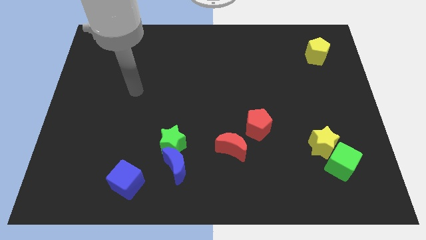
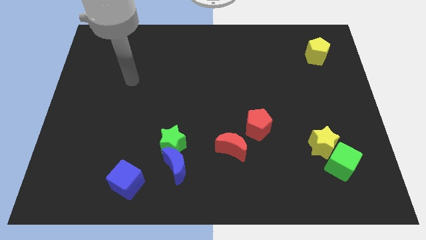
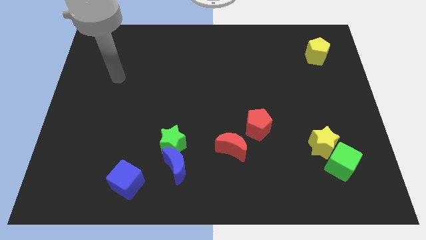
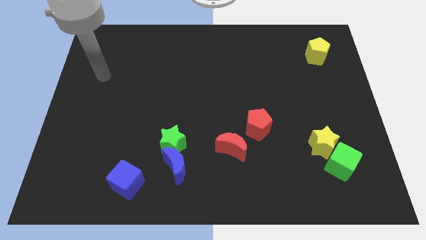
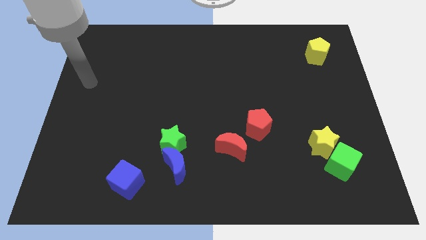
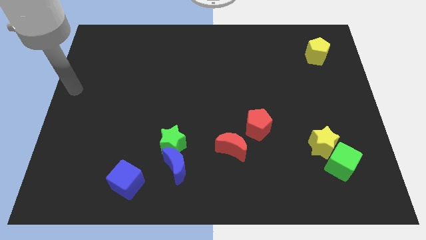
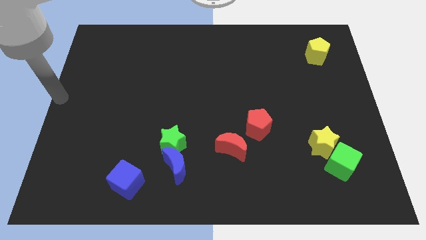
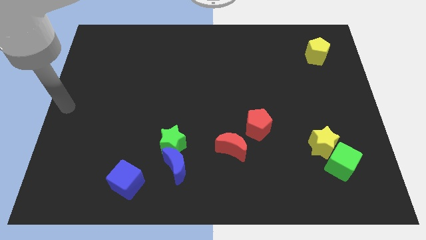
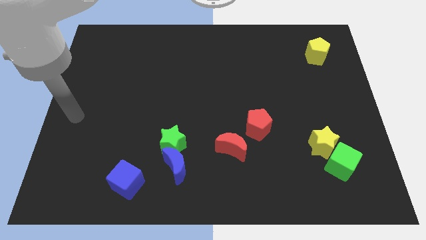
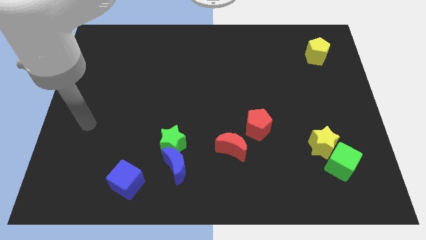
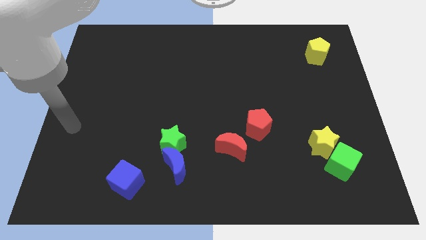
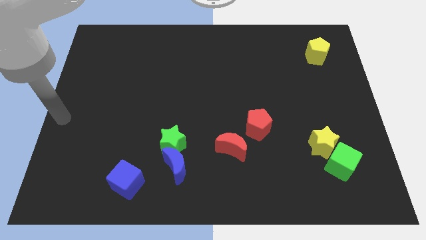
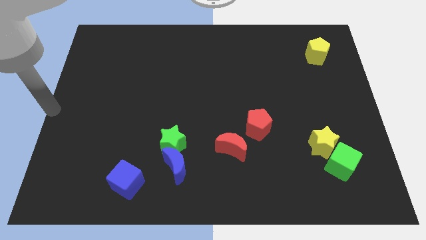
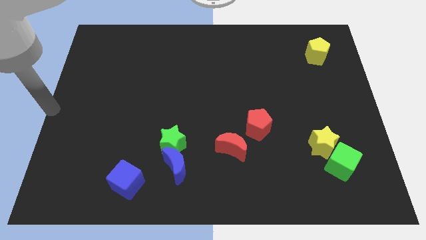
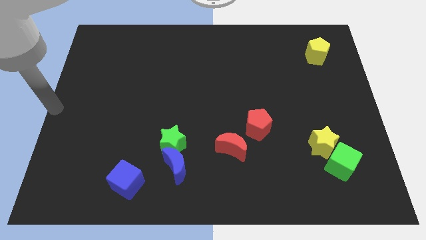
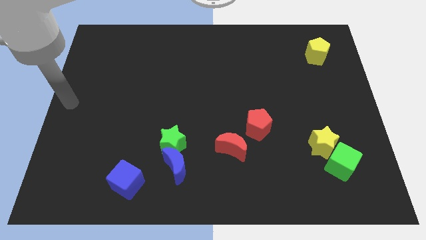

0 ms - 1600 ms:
put your hand at the center left of the board

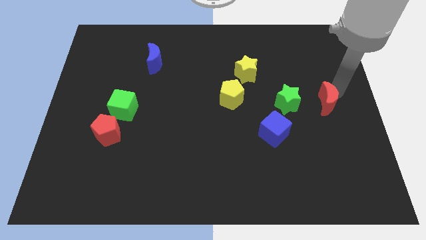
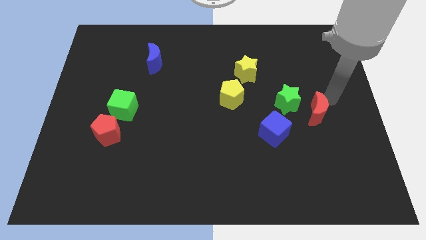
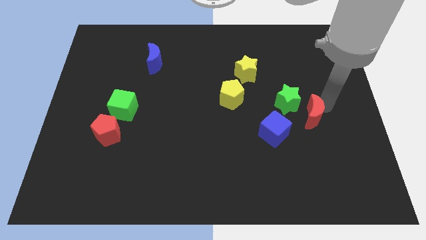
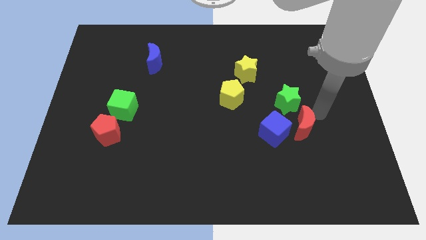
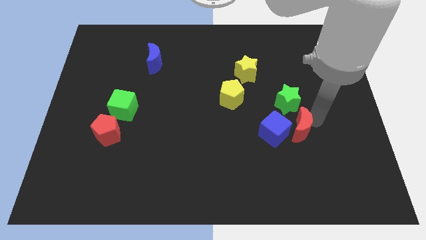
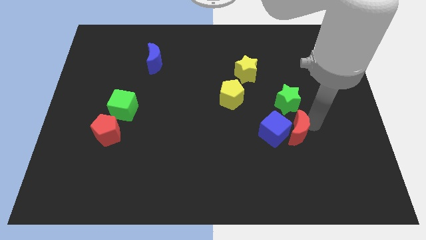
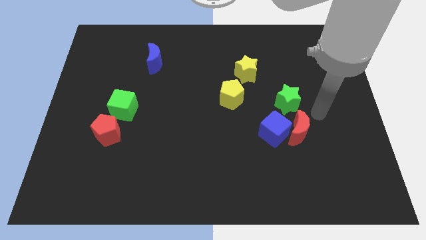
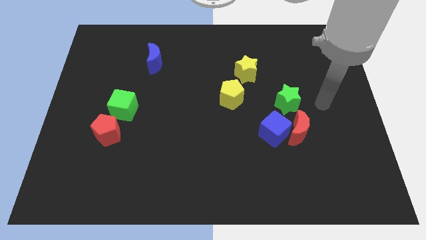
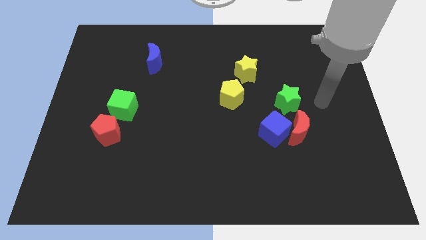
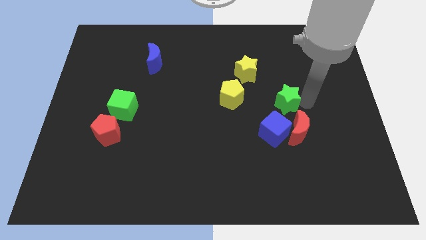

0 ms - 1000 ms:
place red crescent towards the blue cube

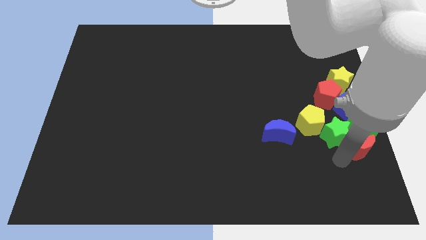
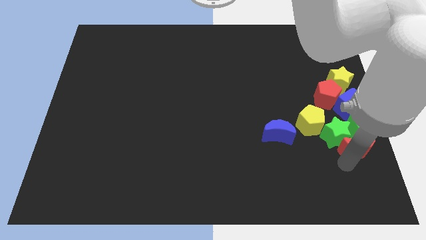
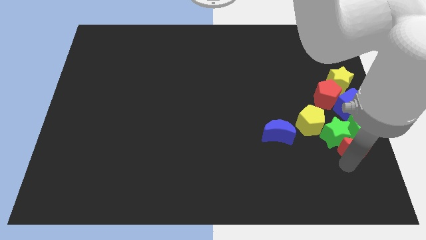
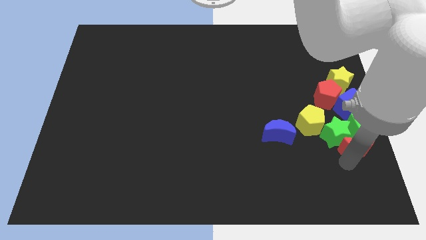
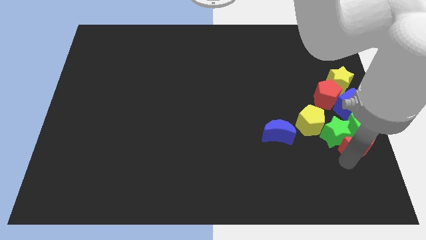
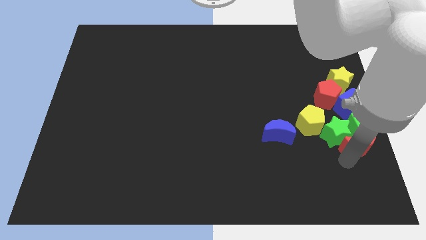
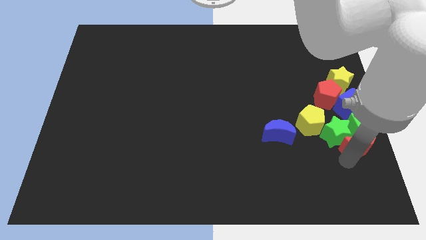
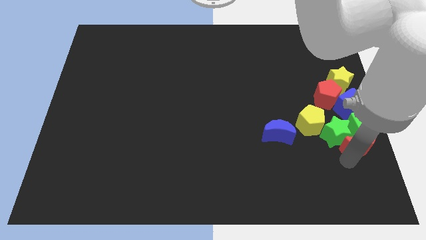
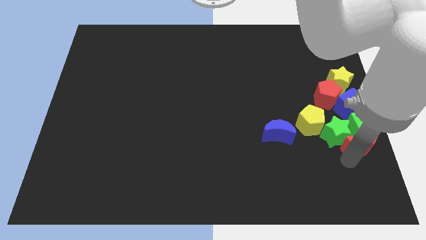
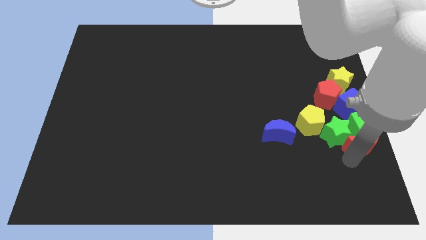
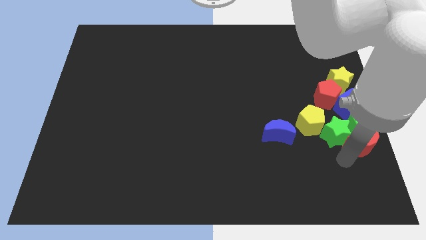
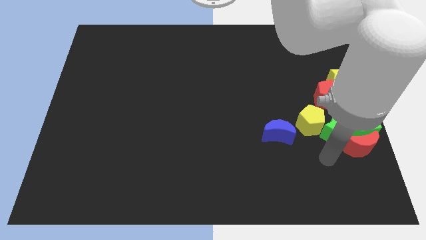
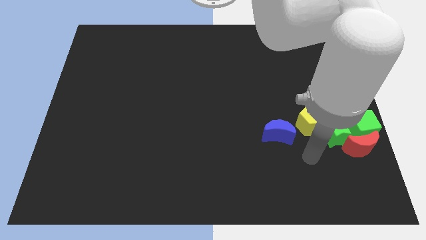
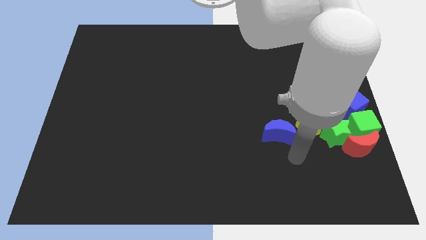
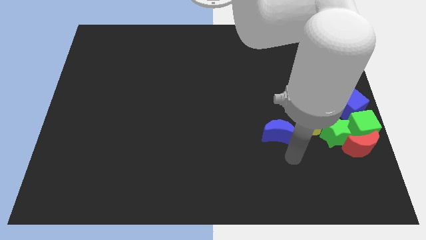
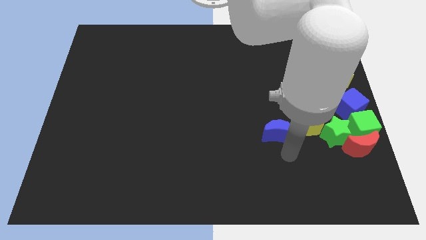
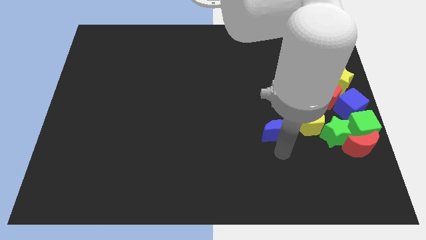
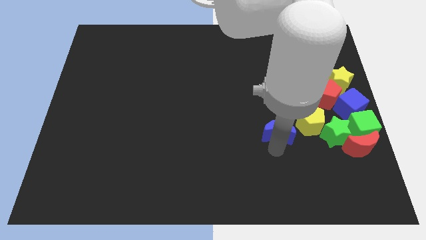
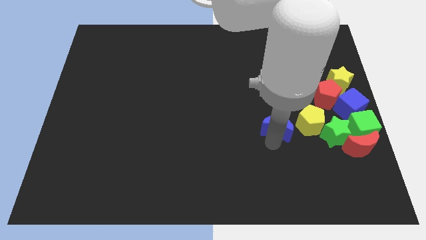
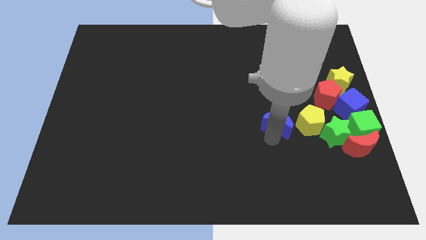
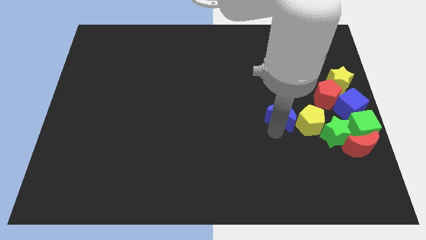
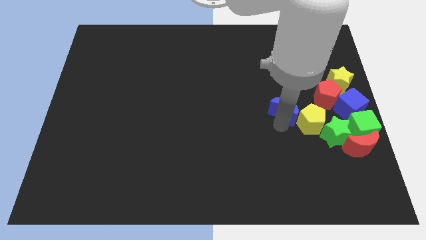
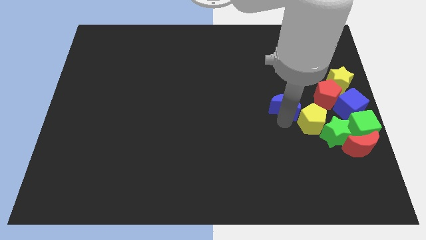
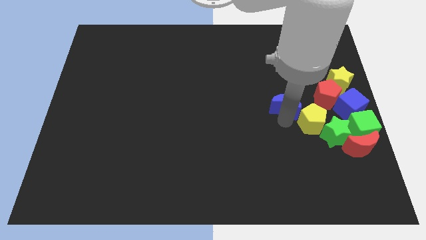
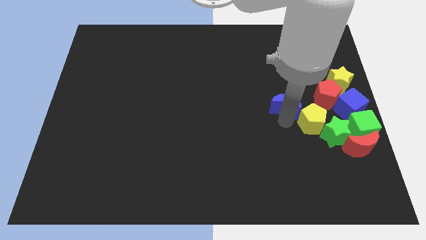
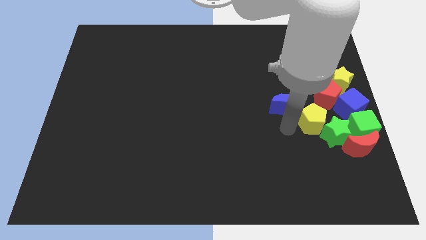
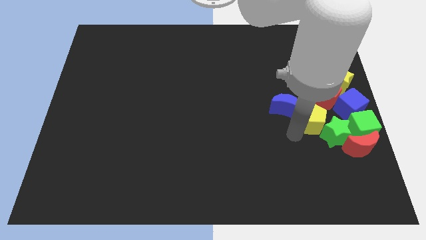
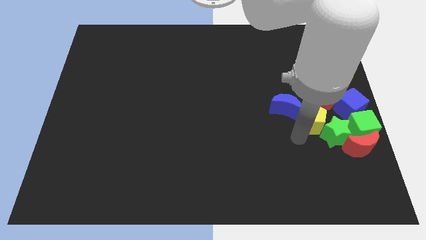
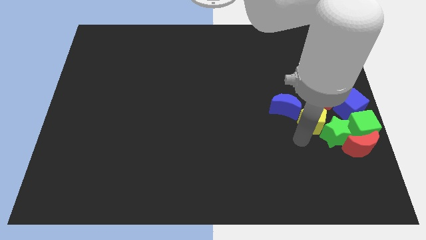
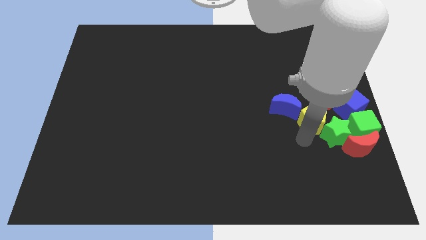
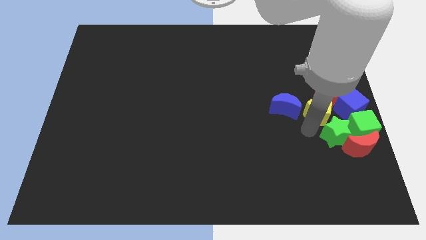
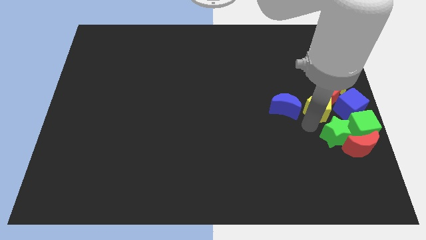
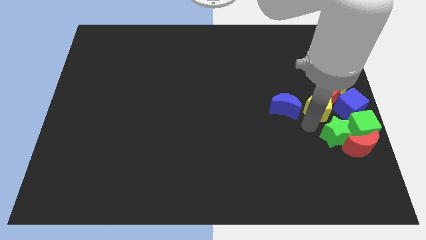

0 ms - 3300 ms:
move the blue crescent on top of the yellow pentagon

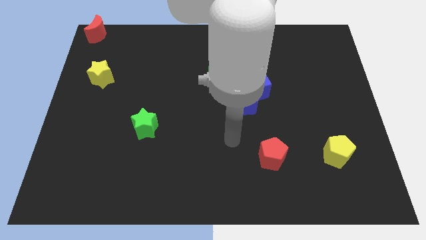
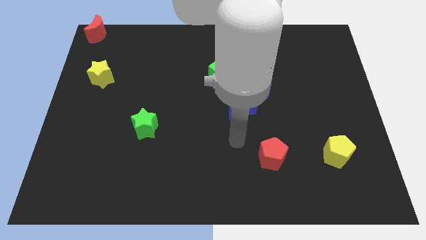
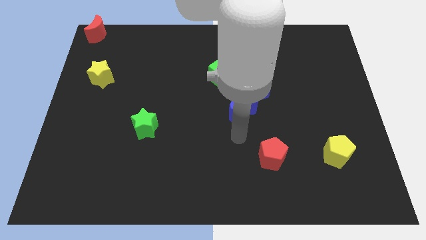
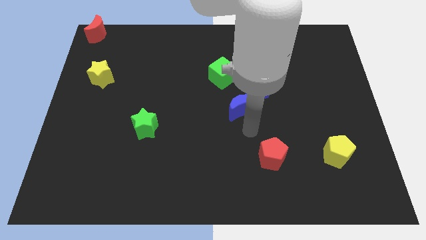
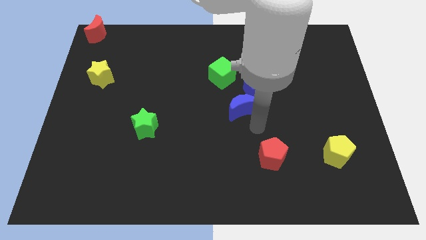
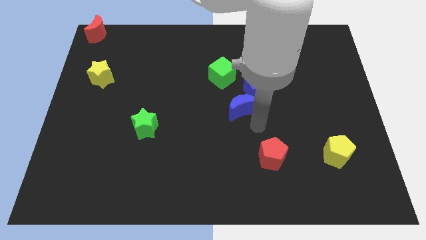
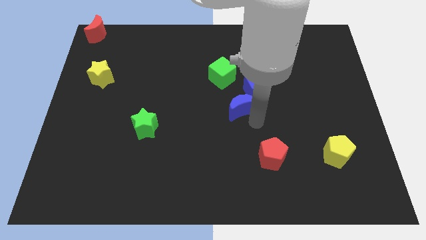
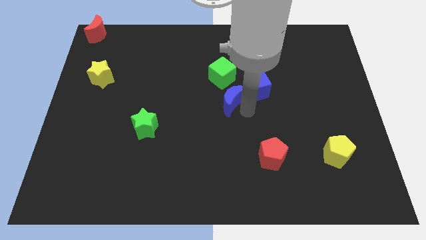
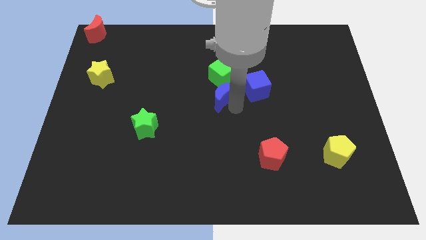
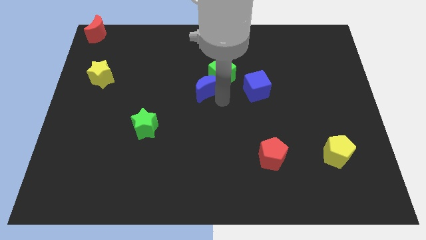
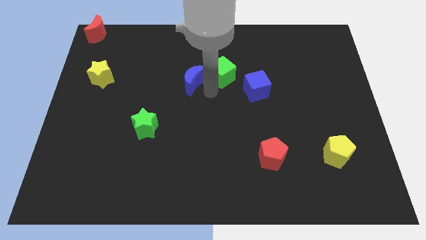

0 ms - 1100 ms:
slide blue moon up to the left of green cube

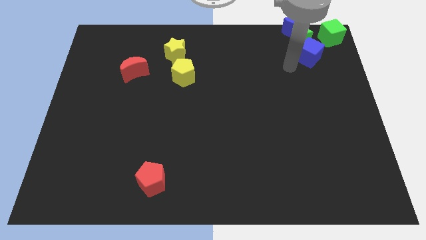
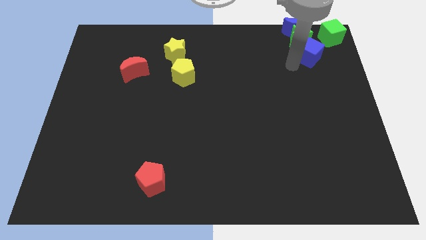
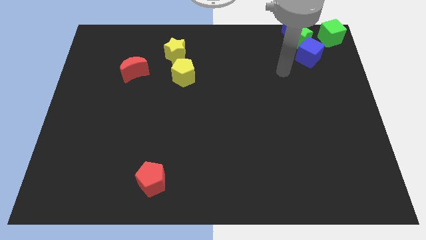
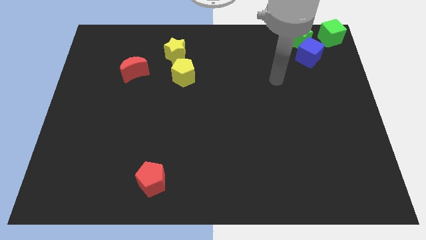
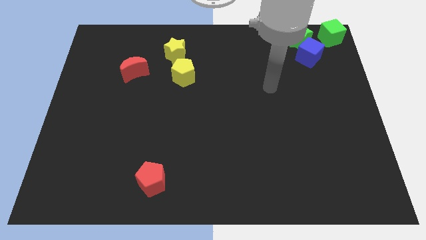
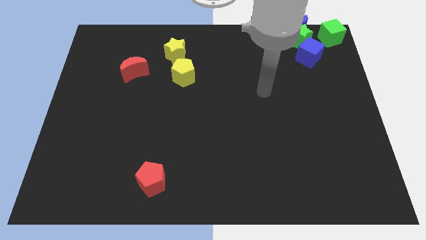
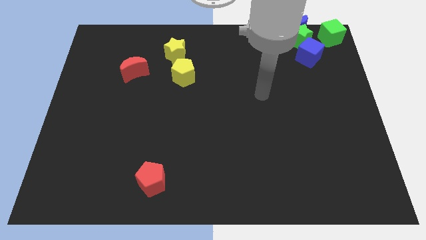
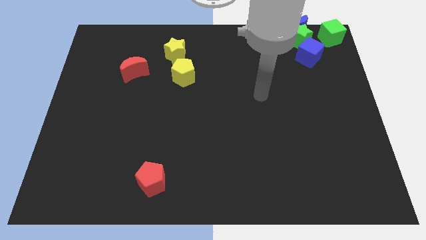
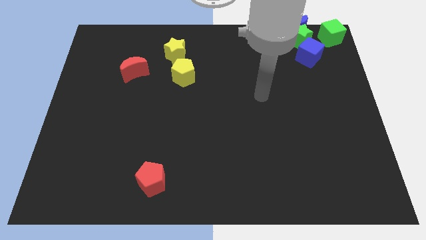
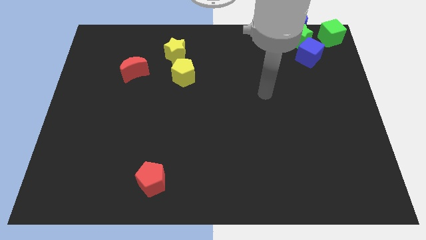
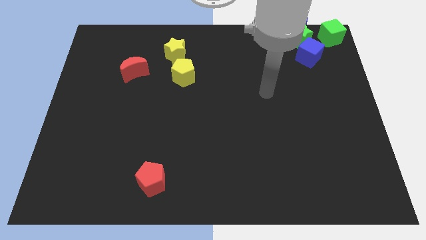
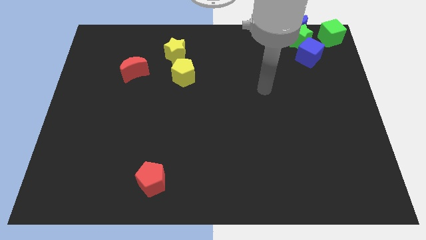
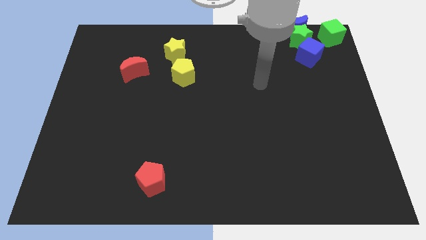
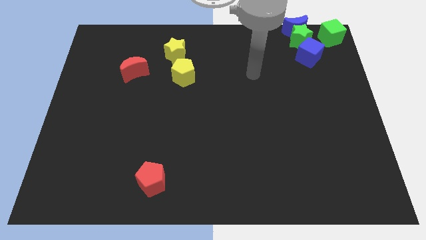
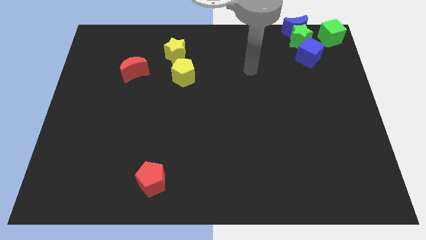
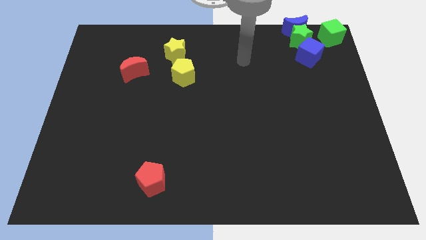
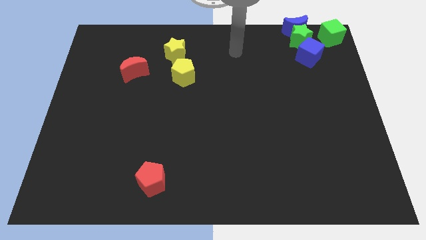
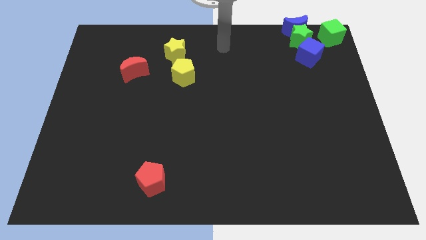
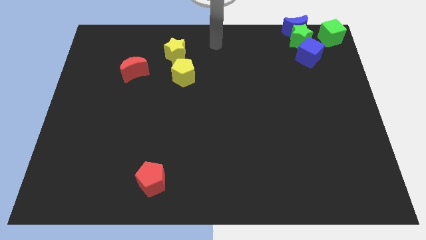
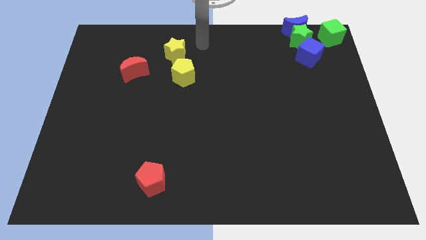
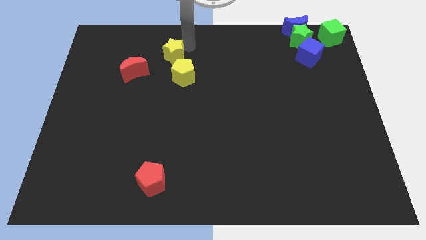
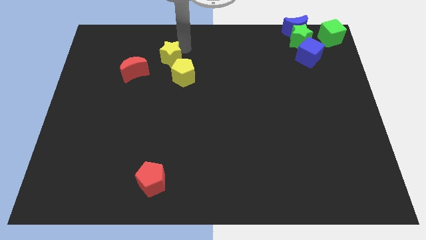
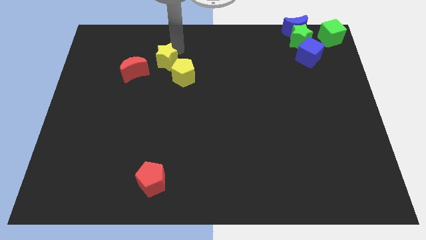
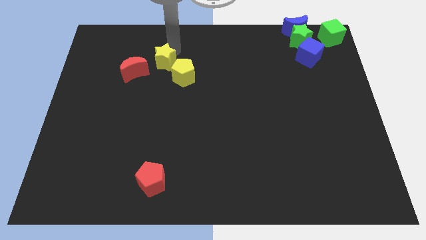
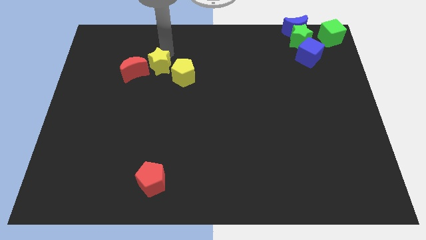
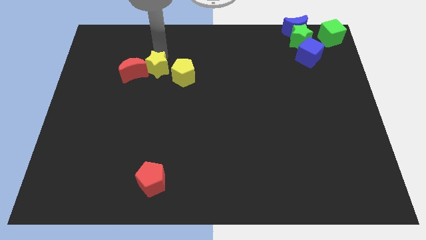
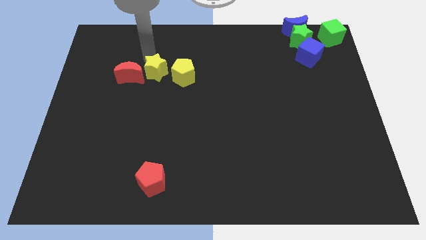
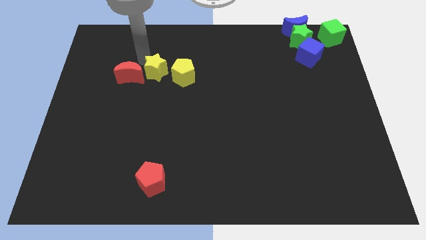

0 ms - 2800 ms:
push the yellow star to the right of the red crescent
